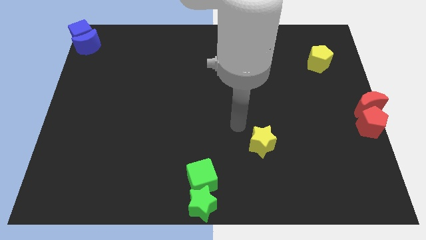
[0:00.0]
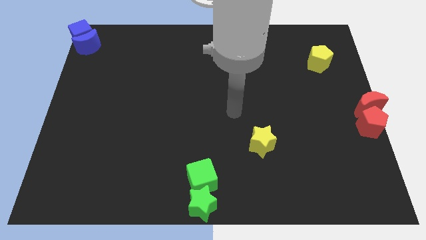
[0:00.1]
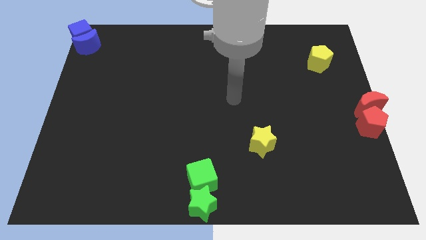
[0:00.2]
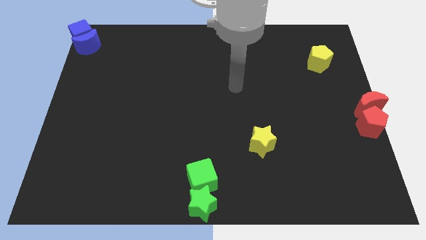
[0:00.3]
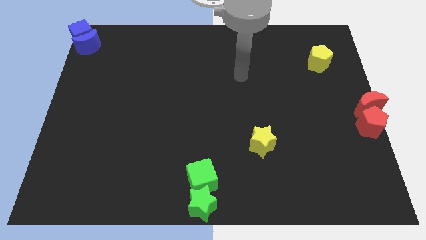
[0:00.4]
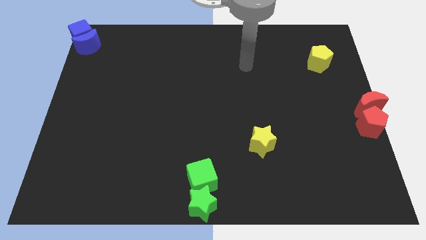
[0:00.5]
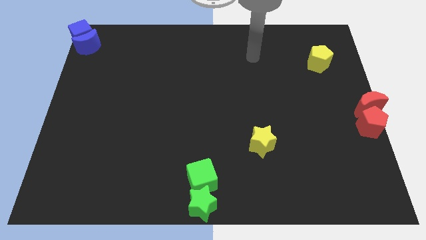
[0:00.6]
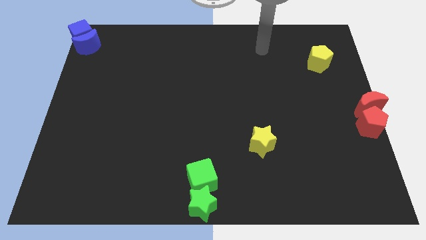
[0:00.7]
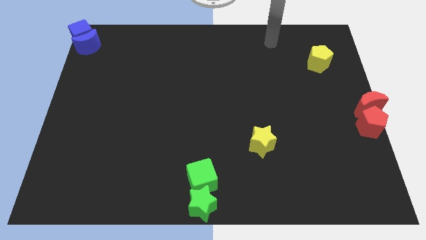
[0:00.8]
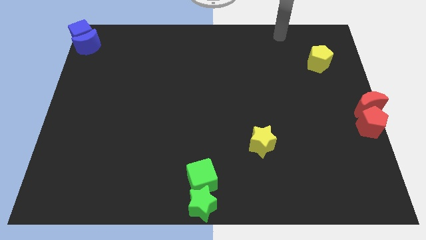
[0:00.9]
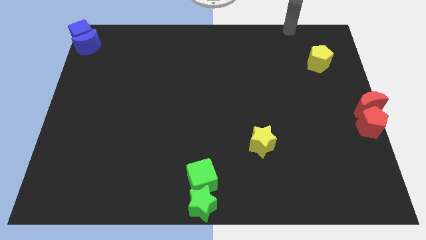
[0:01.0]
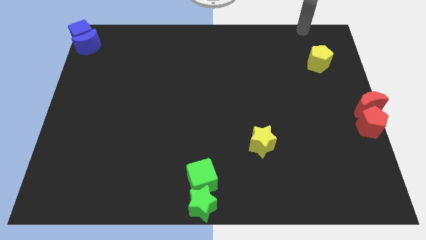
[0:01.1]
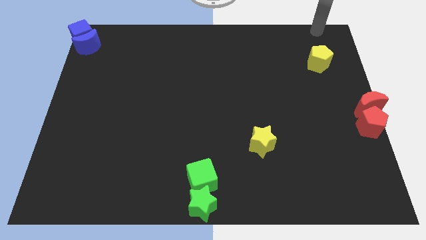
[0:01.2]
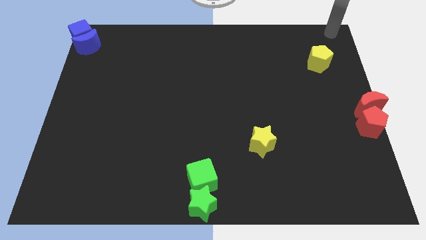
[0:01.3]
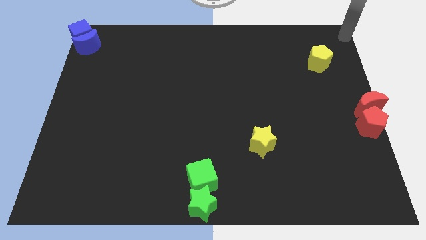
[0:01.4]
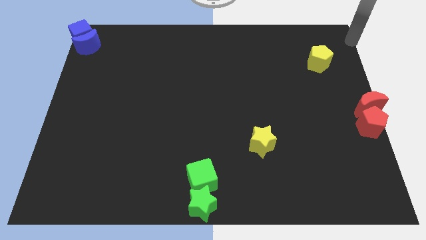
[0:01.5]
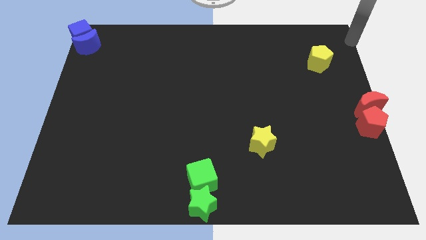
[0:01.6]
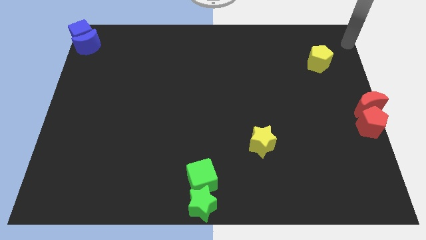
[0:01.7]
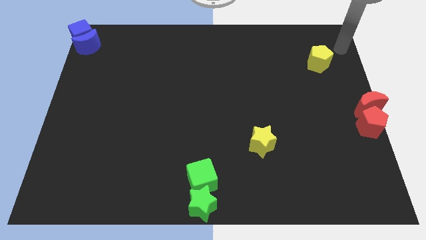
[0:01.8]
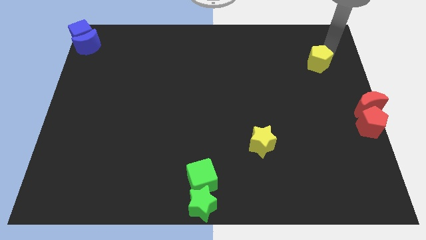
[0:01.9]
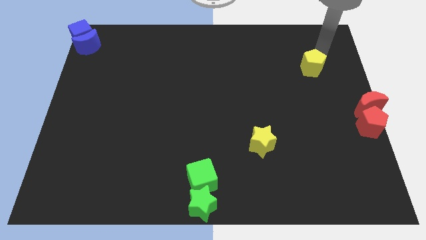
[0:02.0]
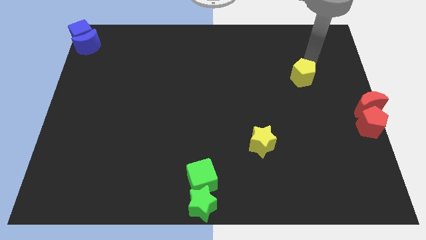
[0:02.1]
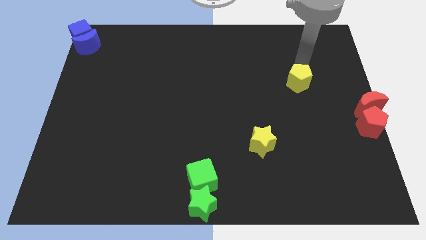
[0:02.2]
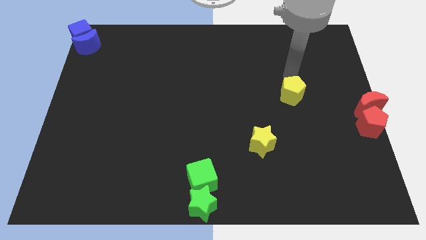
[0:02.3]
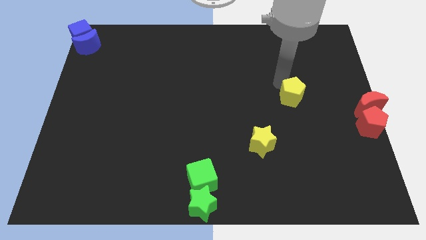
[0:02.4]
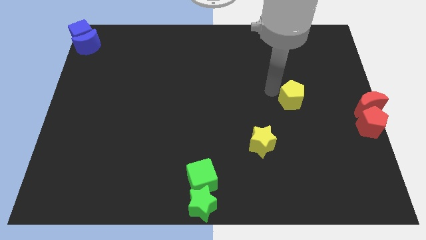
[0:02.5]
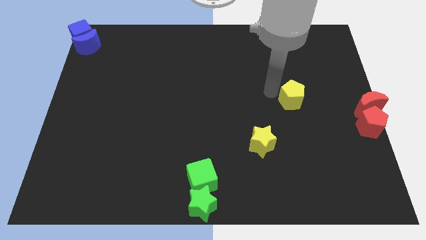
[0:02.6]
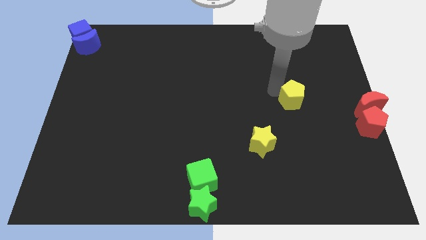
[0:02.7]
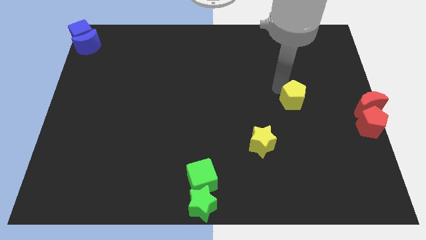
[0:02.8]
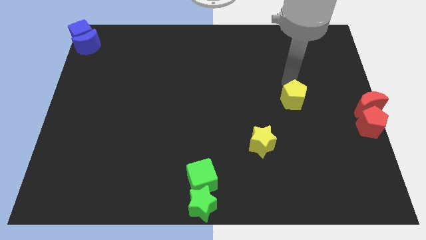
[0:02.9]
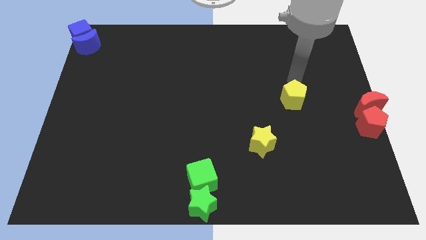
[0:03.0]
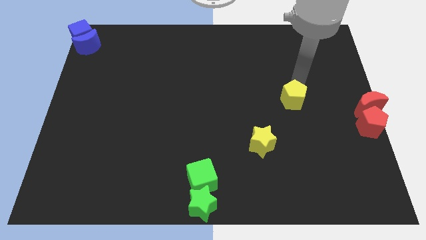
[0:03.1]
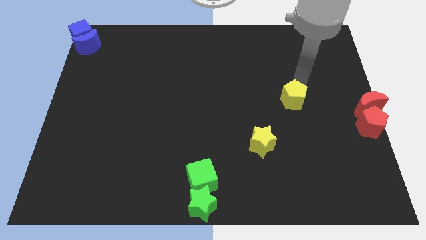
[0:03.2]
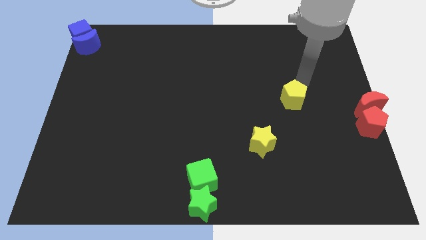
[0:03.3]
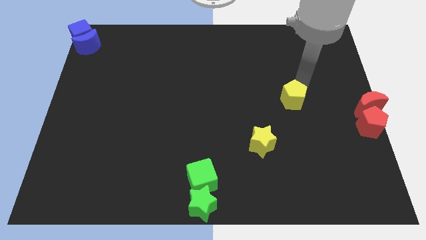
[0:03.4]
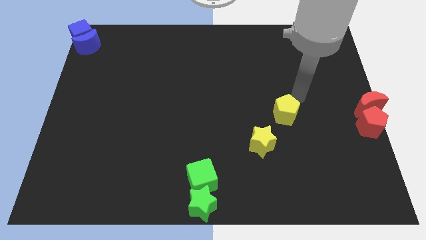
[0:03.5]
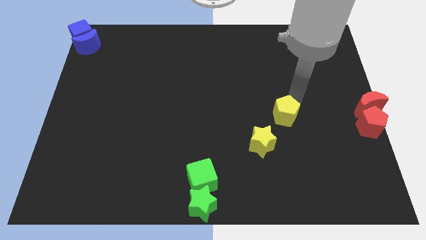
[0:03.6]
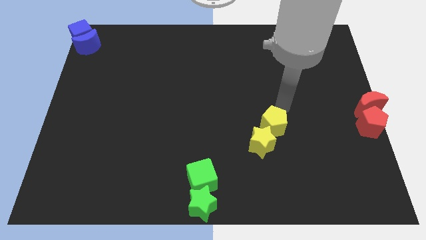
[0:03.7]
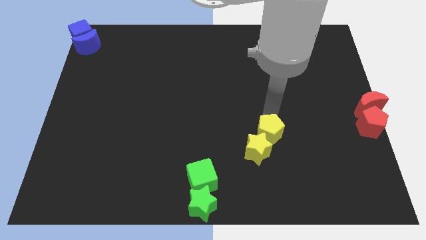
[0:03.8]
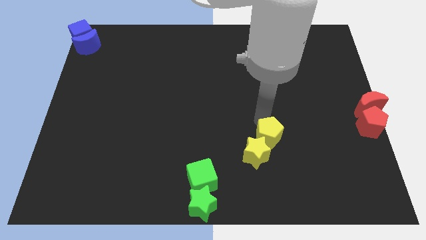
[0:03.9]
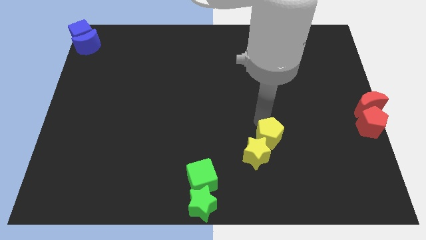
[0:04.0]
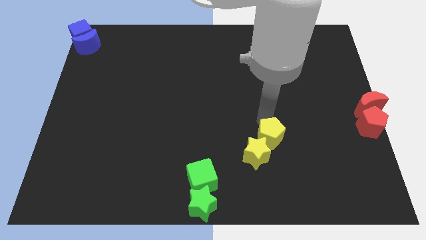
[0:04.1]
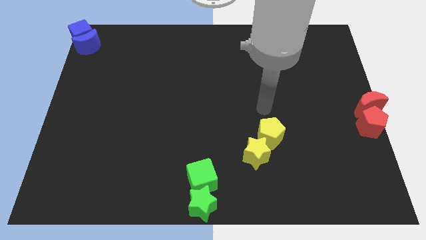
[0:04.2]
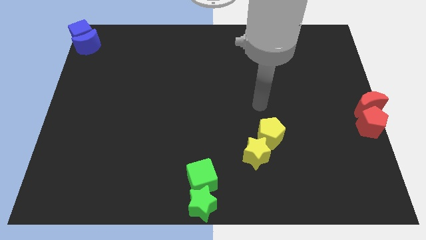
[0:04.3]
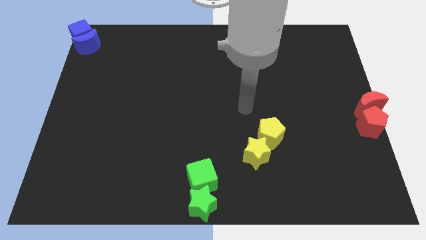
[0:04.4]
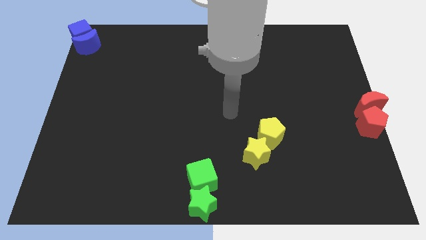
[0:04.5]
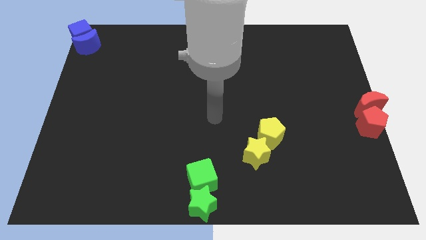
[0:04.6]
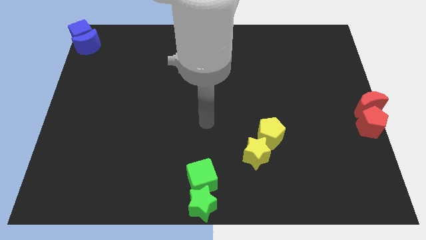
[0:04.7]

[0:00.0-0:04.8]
push the yellow blocks towards the bottom center of the board

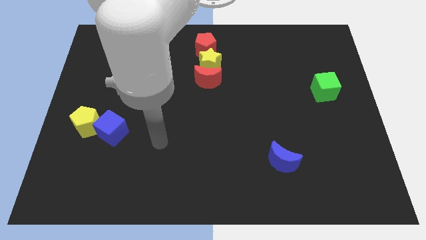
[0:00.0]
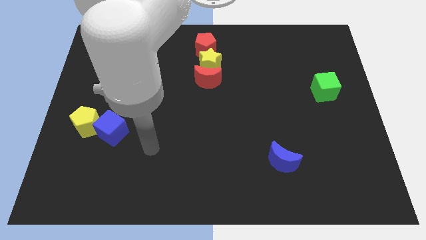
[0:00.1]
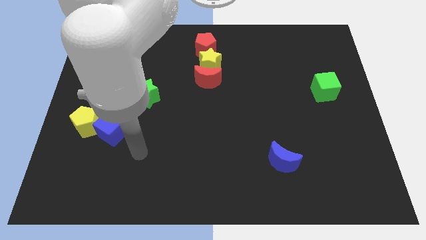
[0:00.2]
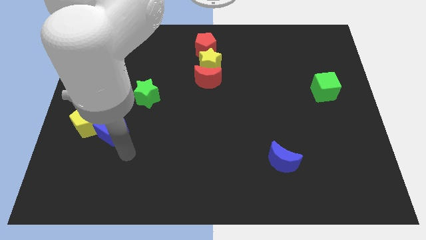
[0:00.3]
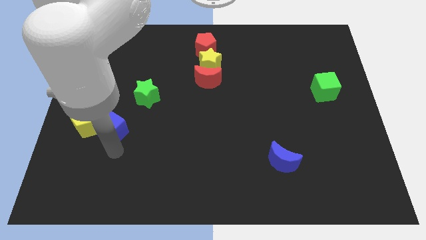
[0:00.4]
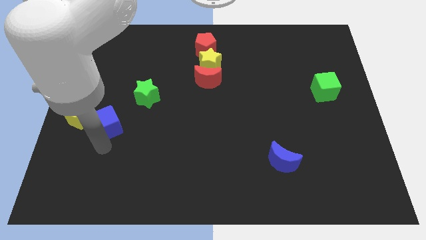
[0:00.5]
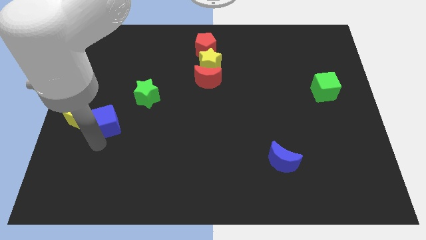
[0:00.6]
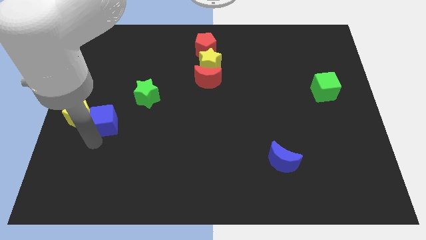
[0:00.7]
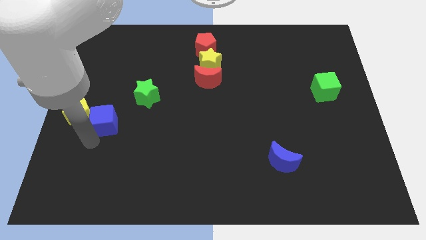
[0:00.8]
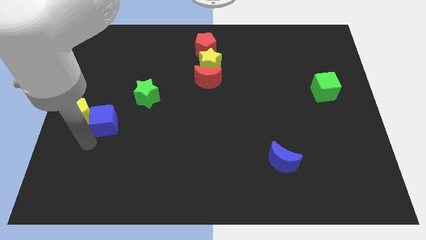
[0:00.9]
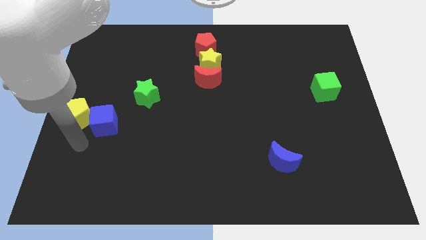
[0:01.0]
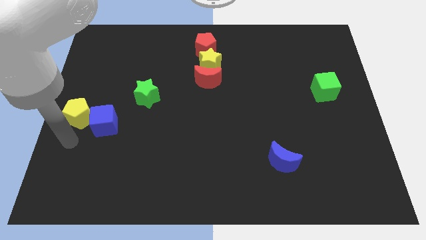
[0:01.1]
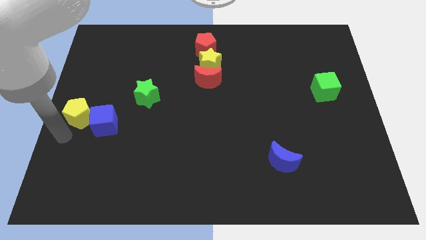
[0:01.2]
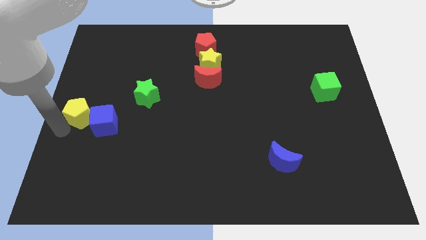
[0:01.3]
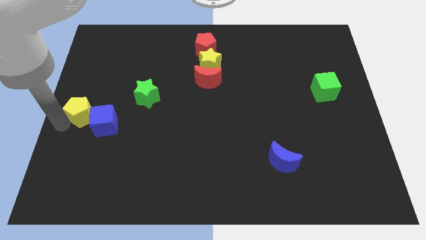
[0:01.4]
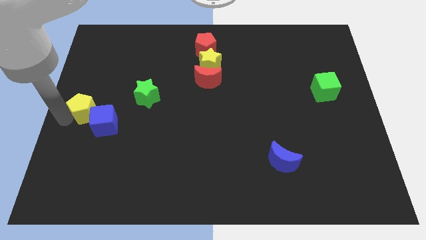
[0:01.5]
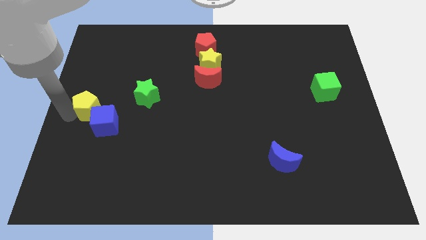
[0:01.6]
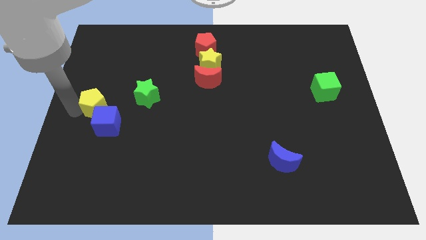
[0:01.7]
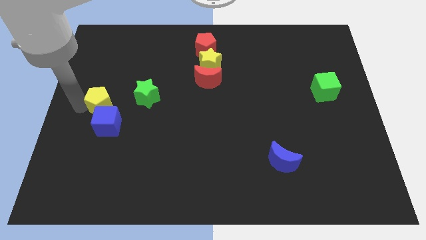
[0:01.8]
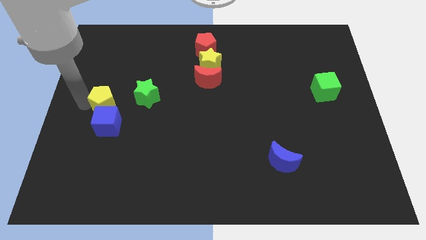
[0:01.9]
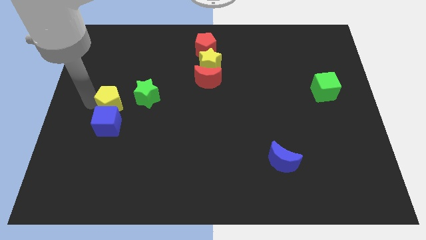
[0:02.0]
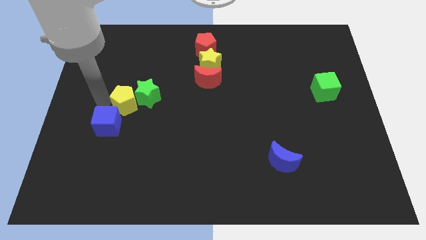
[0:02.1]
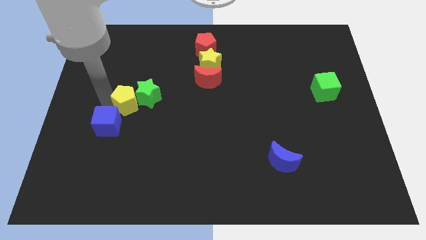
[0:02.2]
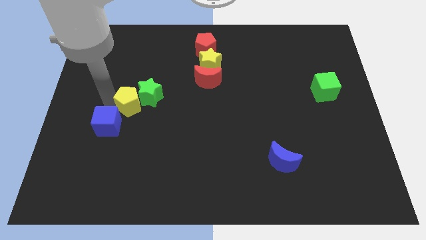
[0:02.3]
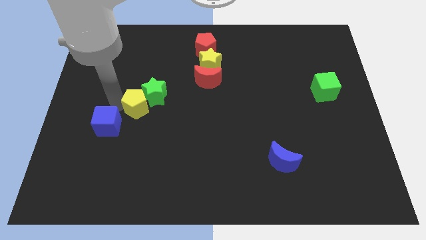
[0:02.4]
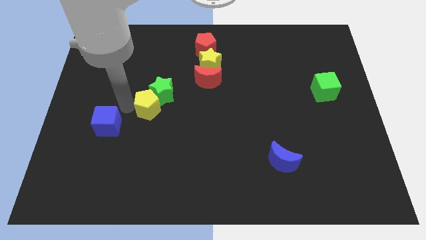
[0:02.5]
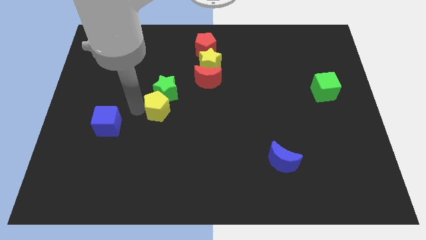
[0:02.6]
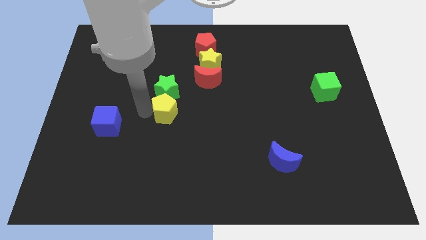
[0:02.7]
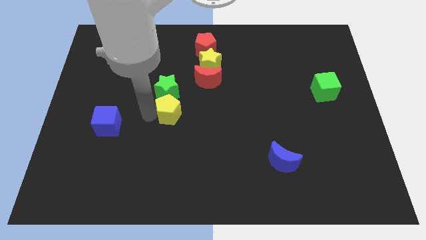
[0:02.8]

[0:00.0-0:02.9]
move the yellow pentagon to the bottom side of the green star

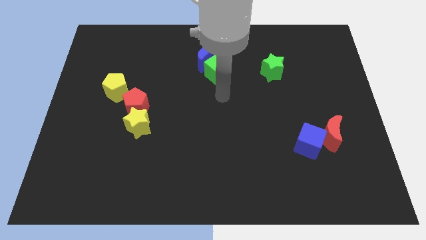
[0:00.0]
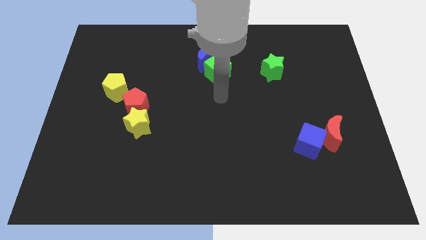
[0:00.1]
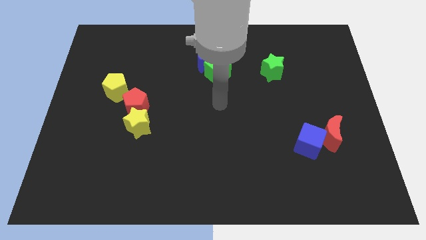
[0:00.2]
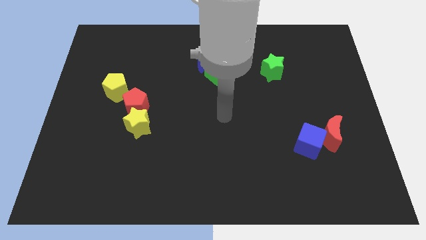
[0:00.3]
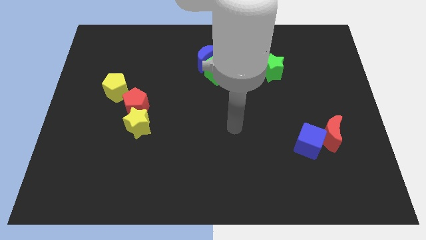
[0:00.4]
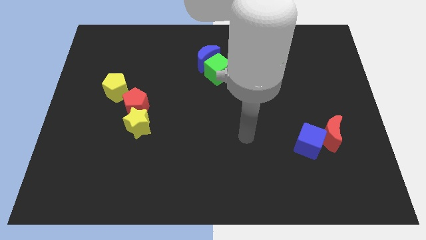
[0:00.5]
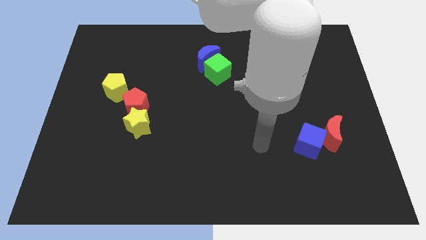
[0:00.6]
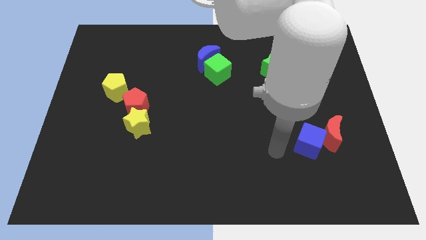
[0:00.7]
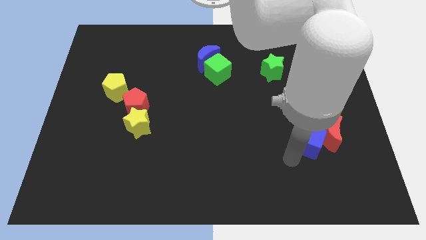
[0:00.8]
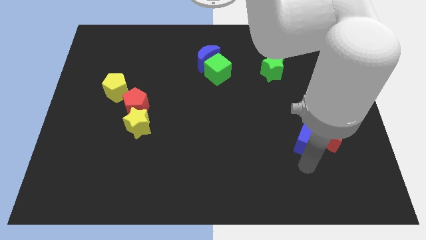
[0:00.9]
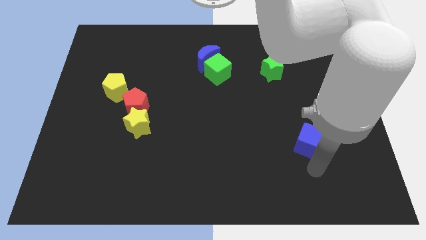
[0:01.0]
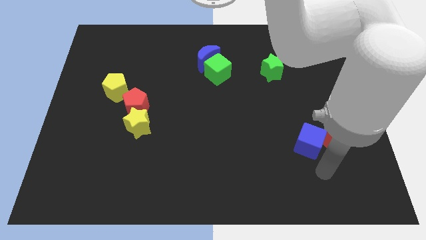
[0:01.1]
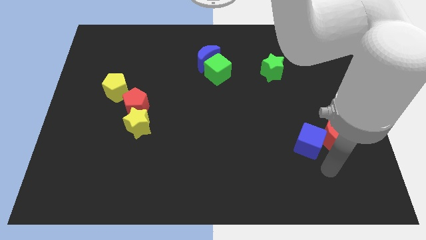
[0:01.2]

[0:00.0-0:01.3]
move away from the green cube
